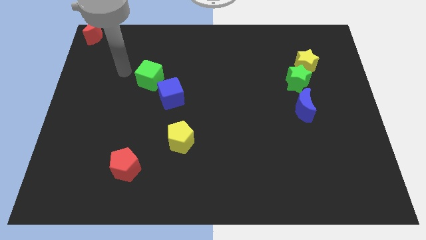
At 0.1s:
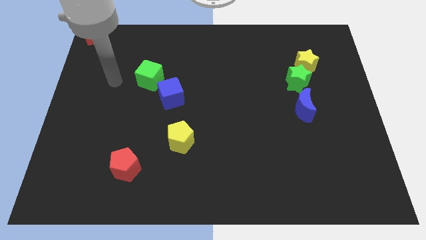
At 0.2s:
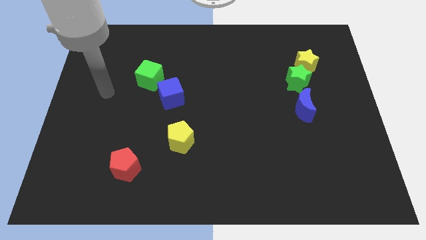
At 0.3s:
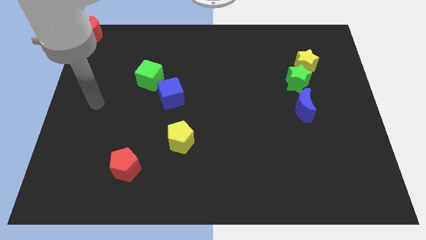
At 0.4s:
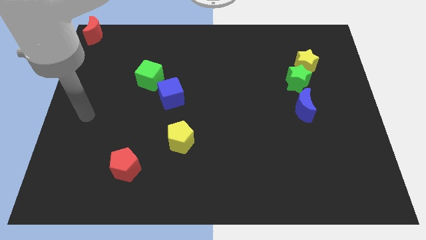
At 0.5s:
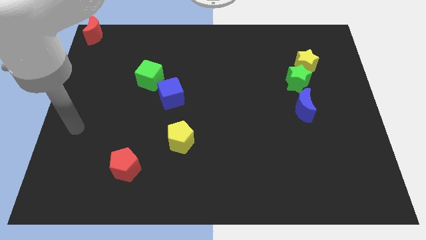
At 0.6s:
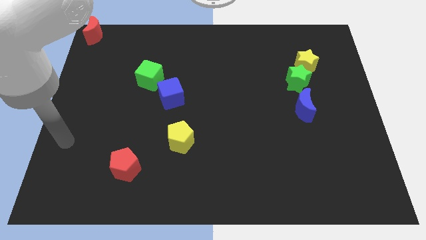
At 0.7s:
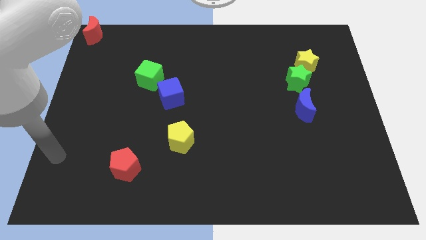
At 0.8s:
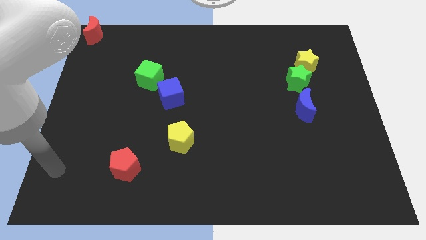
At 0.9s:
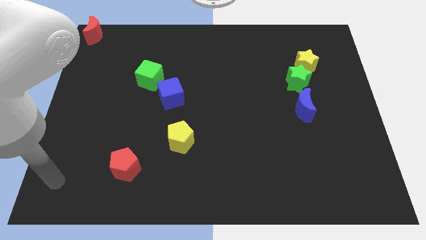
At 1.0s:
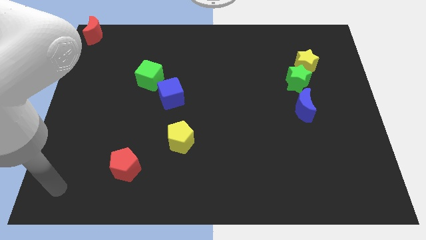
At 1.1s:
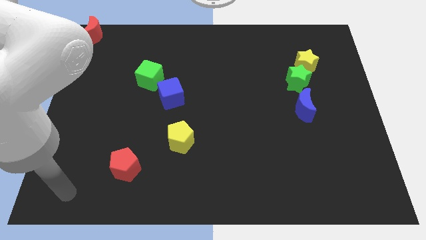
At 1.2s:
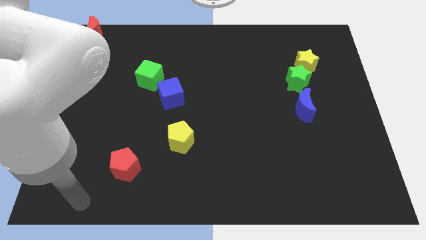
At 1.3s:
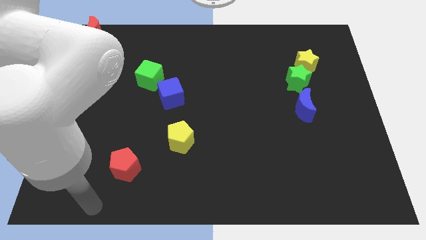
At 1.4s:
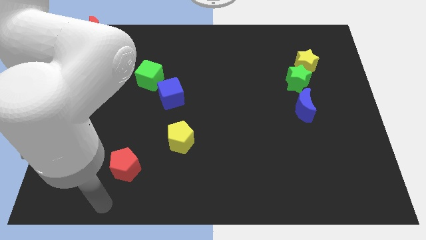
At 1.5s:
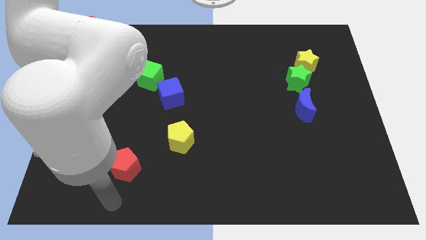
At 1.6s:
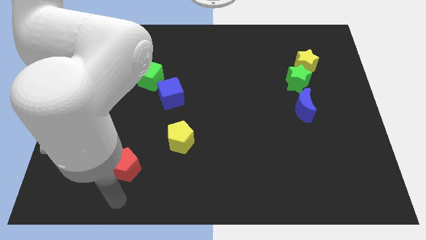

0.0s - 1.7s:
move your arm to the bottom of the red pentagon

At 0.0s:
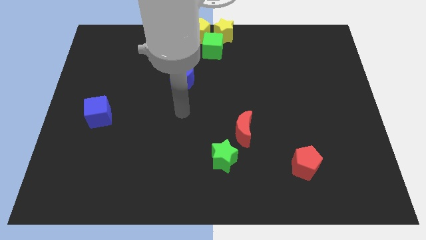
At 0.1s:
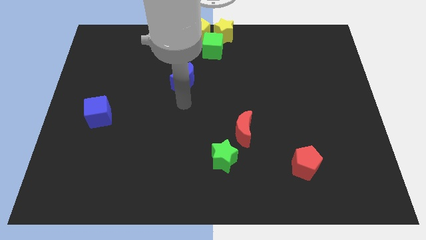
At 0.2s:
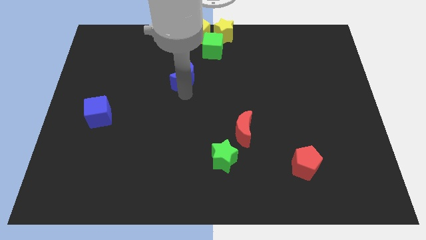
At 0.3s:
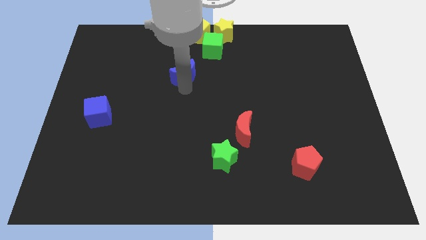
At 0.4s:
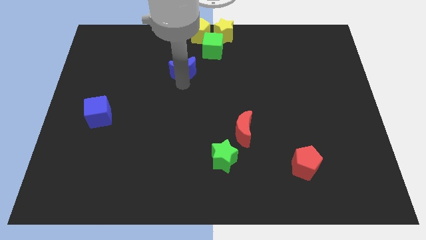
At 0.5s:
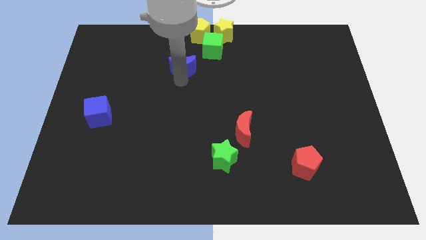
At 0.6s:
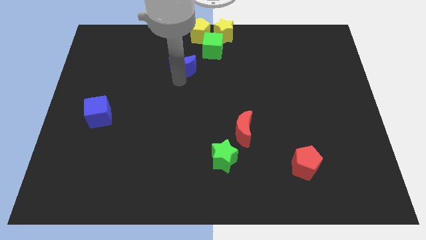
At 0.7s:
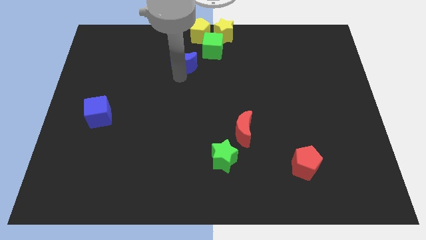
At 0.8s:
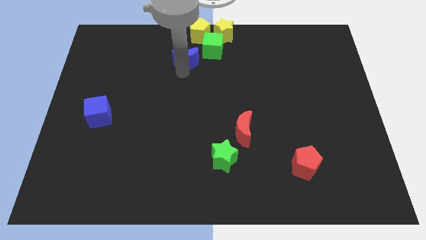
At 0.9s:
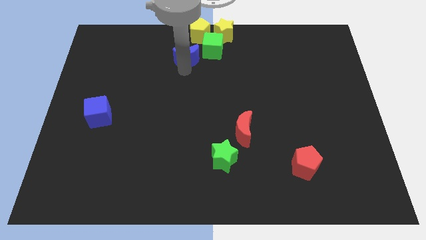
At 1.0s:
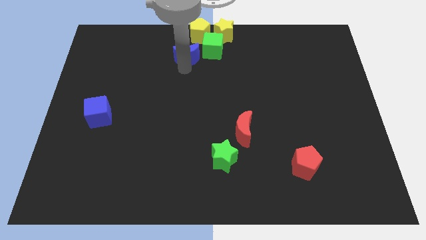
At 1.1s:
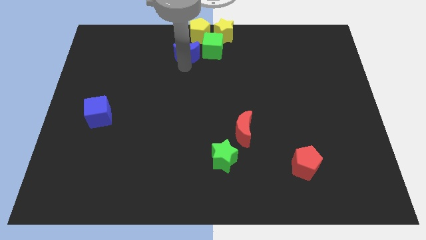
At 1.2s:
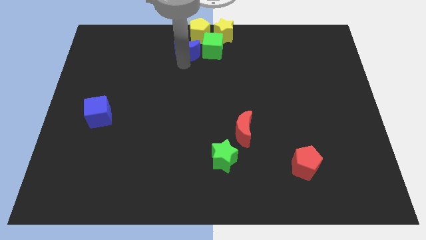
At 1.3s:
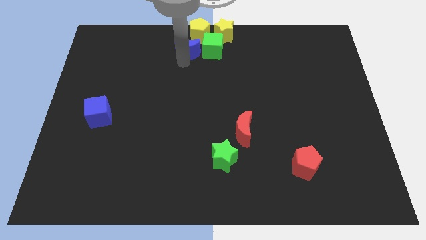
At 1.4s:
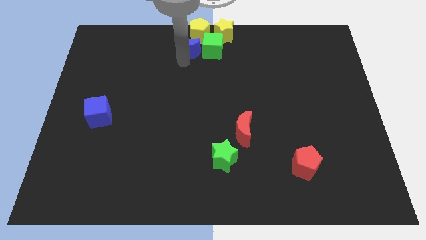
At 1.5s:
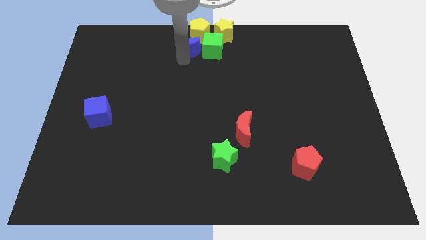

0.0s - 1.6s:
push blue moon to the left of green cube

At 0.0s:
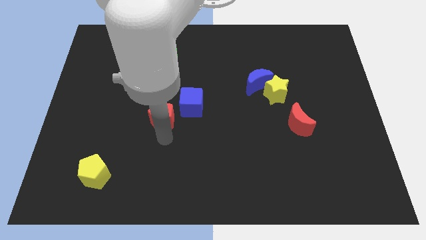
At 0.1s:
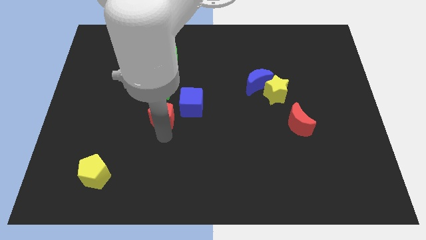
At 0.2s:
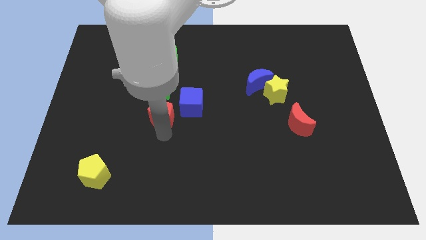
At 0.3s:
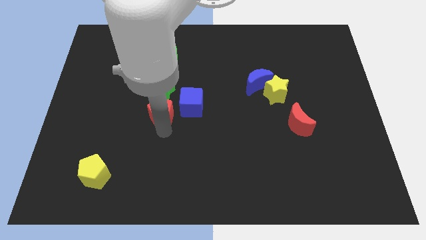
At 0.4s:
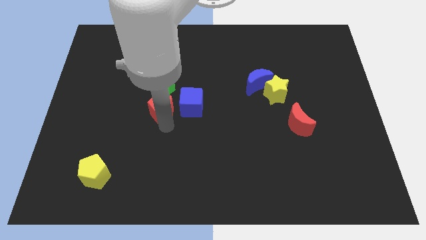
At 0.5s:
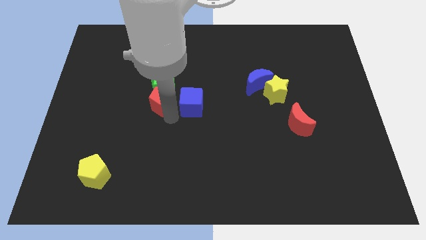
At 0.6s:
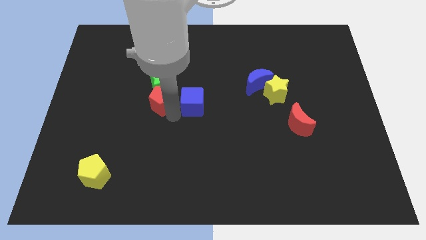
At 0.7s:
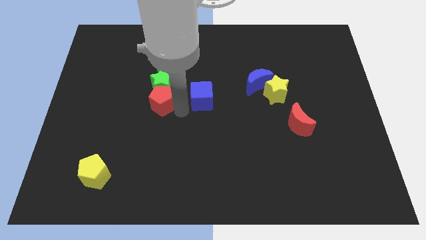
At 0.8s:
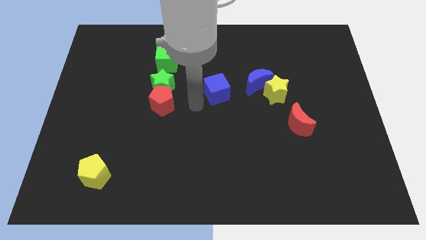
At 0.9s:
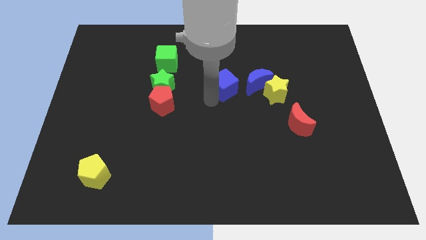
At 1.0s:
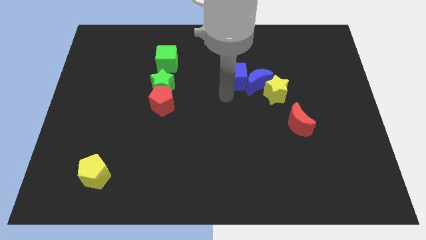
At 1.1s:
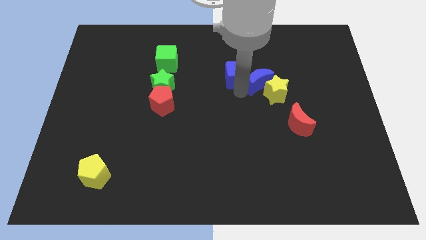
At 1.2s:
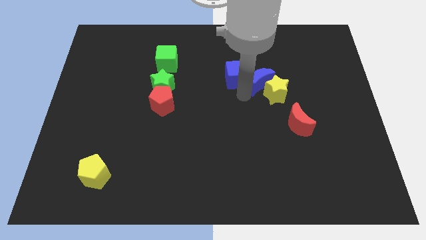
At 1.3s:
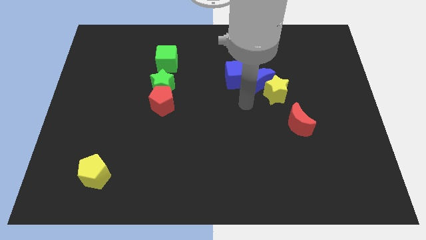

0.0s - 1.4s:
push blue cube close to blue crescent

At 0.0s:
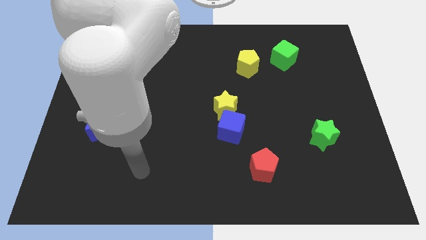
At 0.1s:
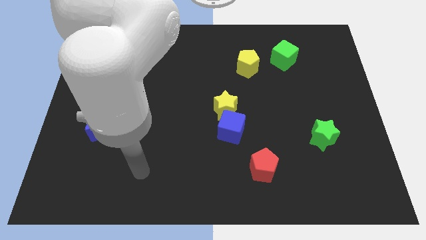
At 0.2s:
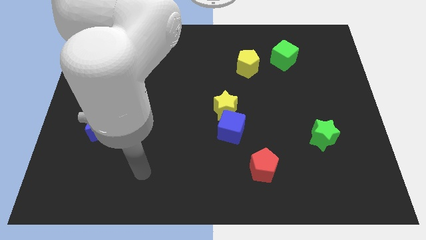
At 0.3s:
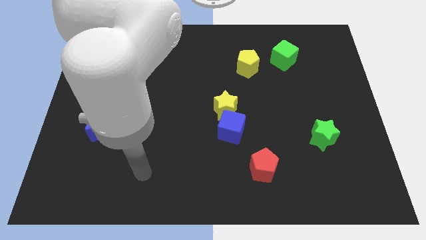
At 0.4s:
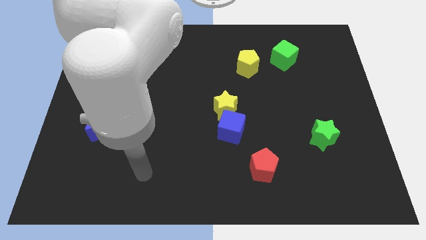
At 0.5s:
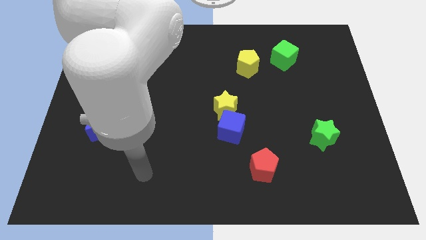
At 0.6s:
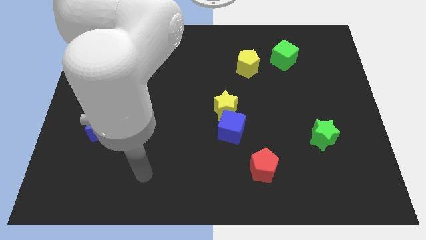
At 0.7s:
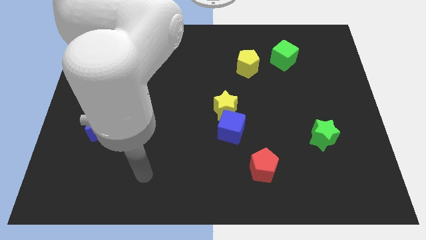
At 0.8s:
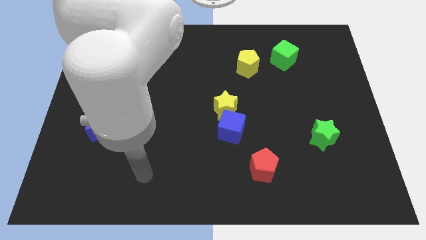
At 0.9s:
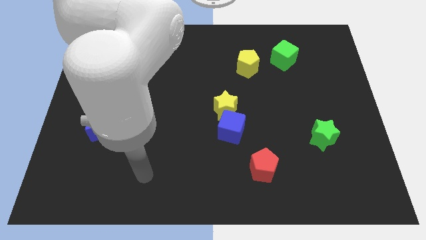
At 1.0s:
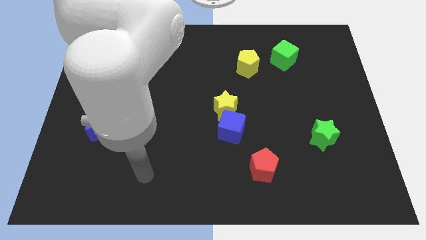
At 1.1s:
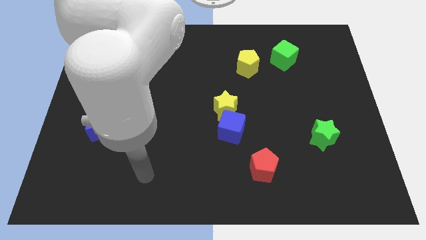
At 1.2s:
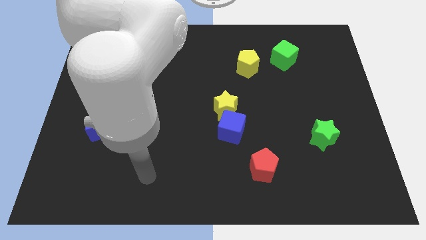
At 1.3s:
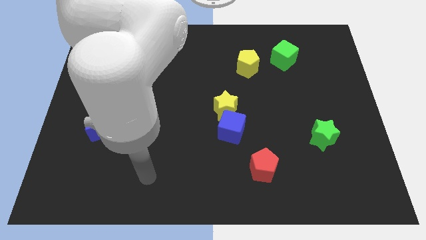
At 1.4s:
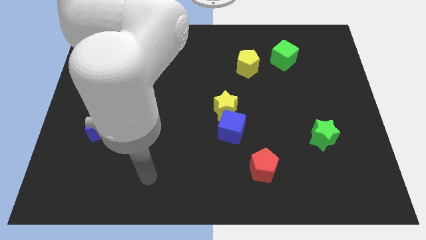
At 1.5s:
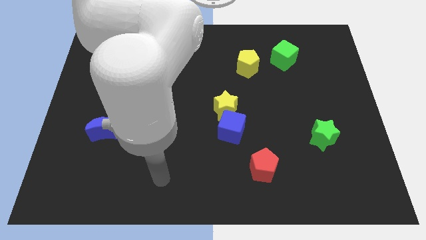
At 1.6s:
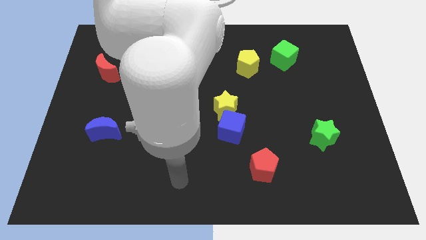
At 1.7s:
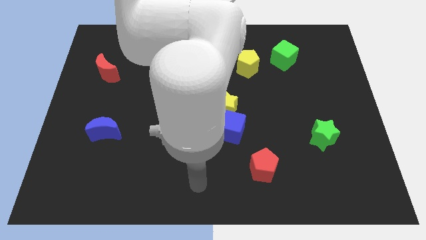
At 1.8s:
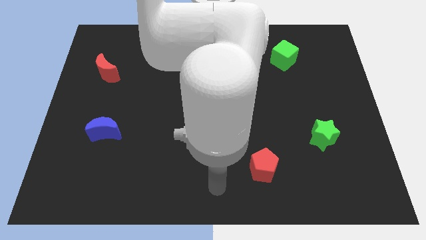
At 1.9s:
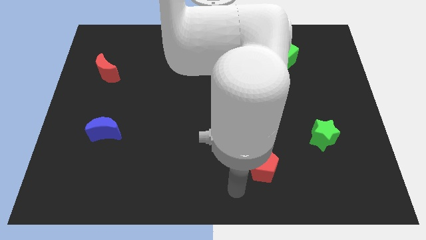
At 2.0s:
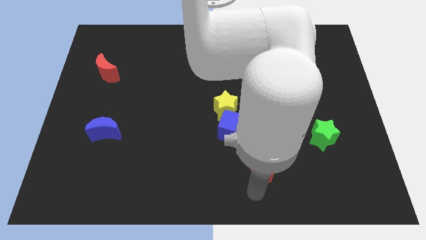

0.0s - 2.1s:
move your hand towards red pentagon

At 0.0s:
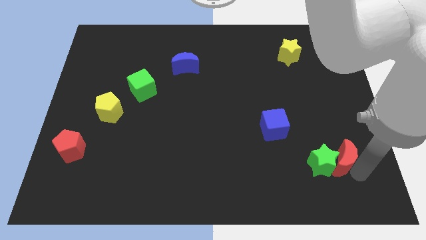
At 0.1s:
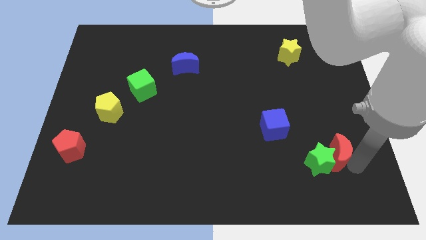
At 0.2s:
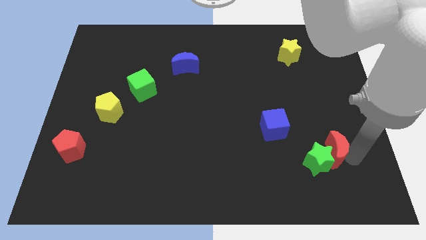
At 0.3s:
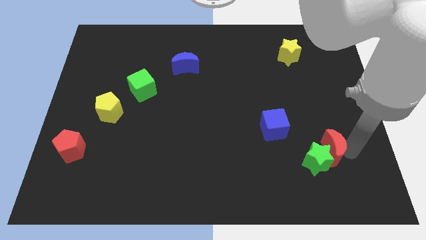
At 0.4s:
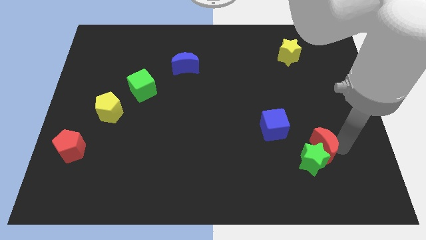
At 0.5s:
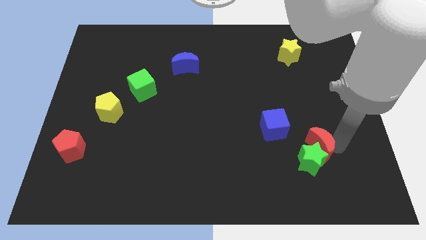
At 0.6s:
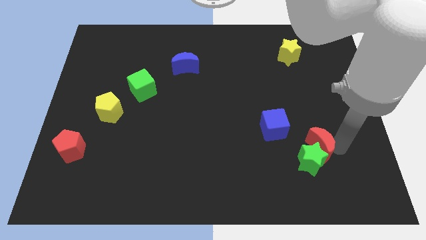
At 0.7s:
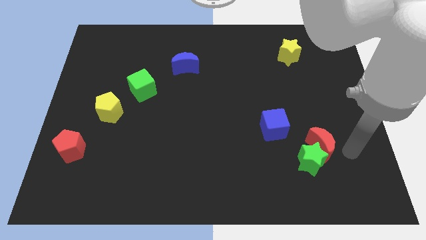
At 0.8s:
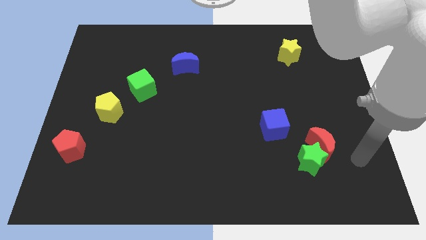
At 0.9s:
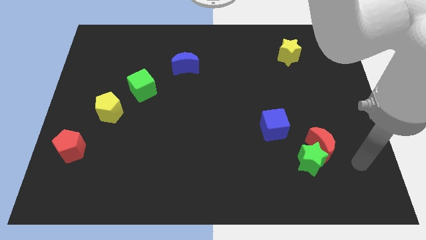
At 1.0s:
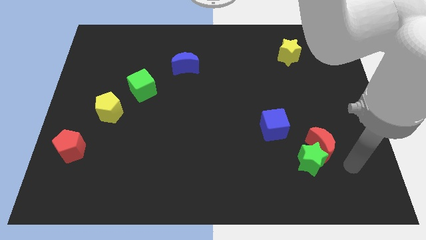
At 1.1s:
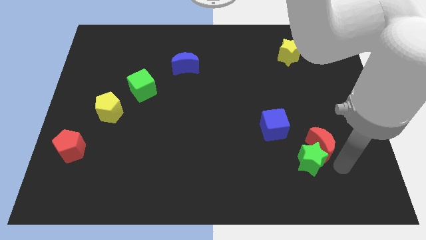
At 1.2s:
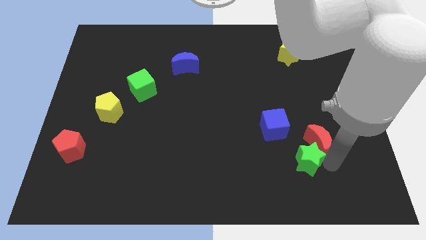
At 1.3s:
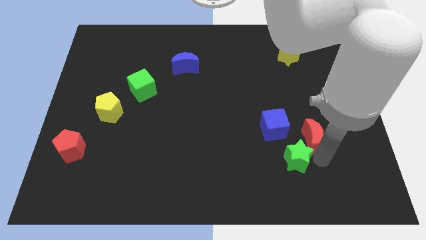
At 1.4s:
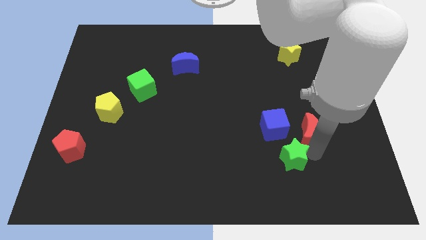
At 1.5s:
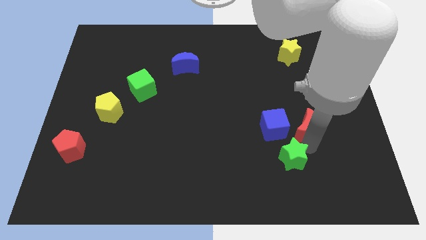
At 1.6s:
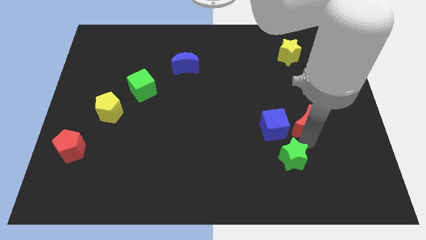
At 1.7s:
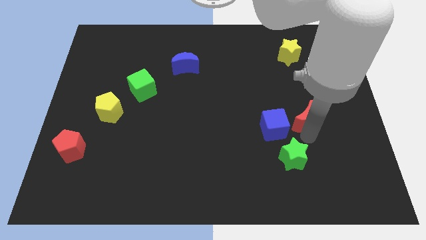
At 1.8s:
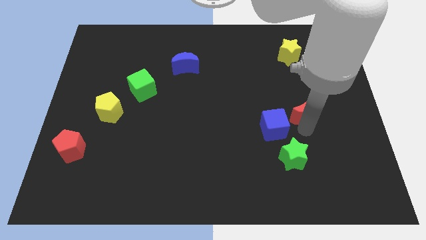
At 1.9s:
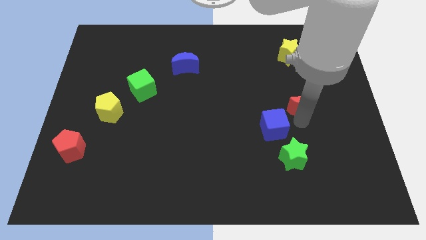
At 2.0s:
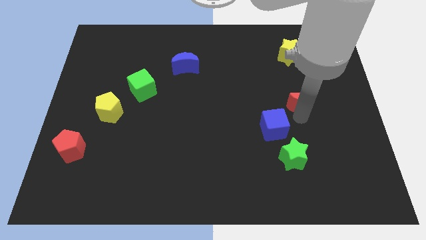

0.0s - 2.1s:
slide red moon vertically below the yellow star

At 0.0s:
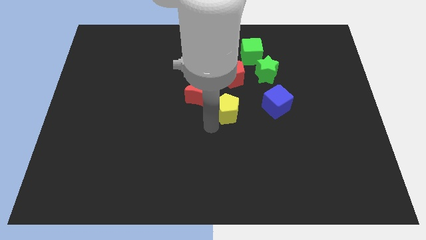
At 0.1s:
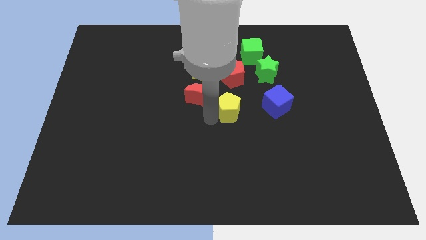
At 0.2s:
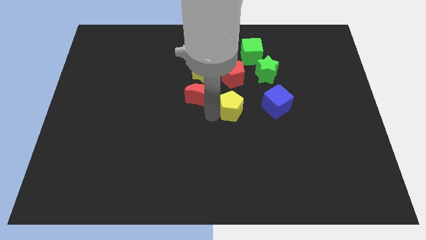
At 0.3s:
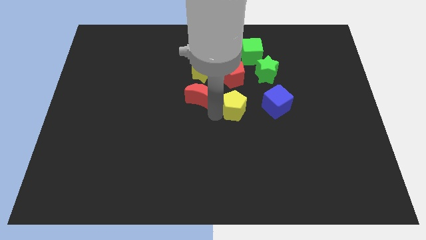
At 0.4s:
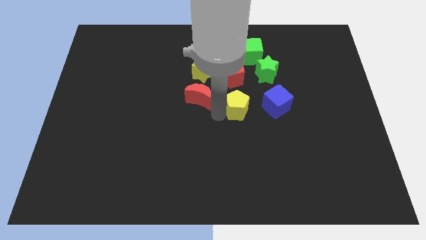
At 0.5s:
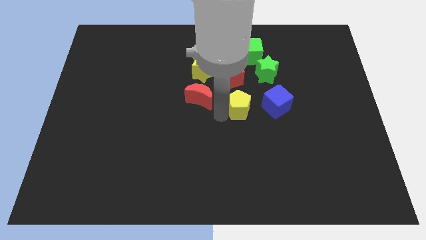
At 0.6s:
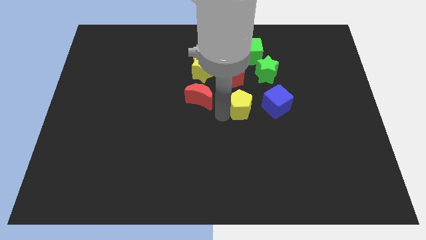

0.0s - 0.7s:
place the yellow pentagon between the red moon and blue cube
